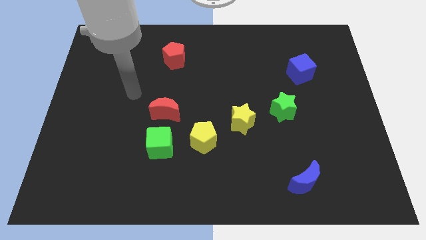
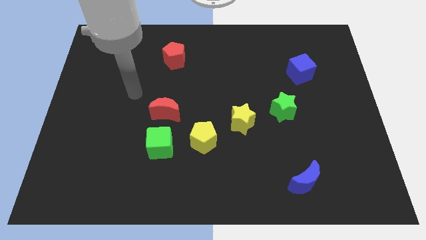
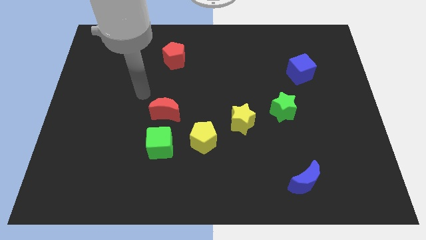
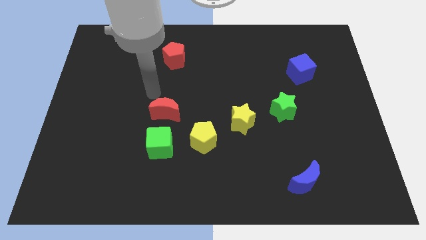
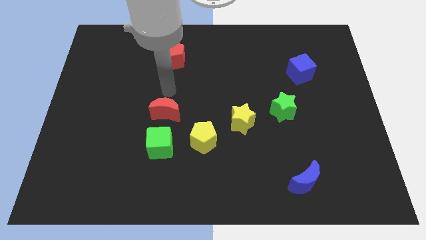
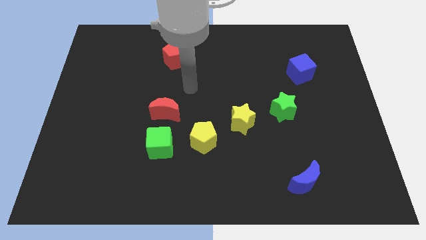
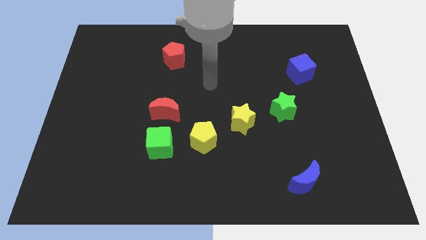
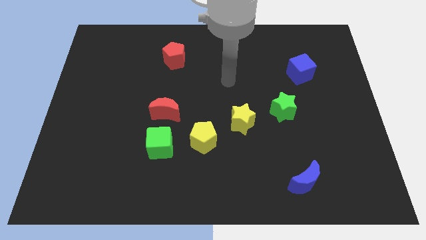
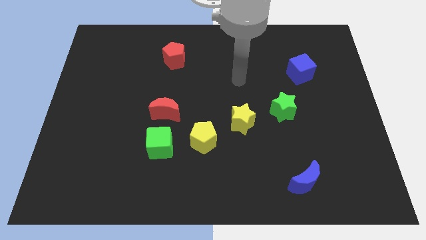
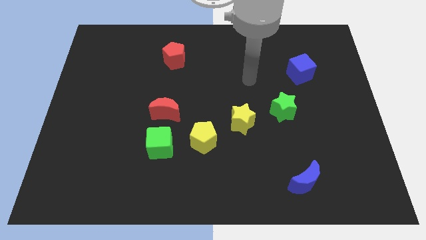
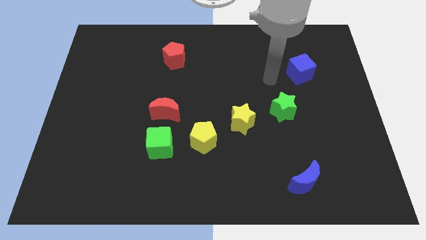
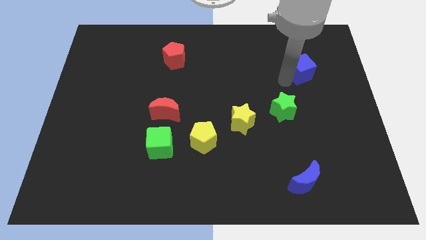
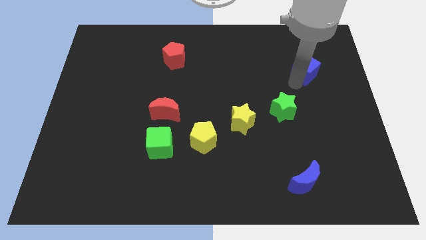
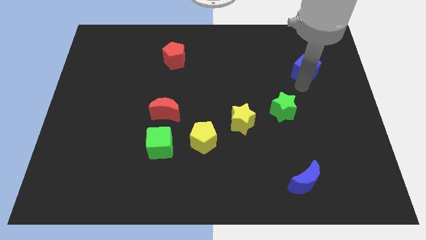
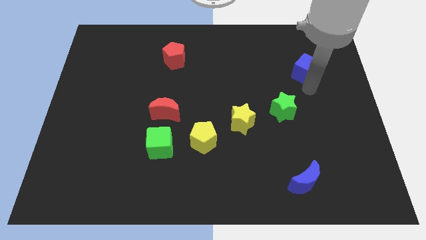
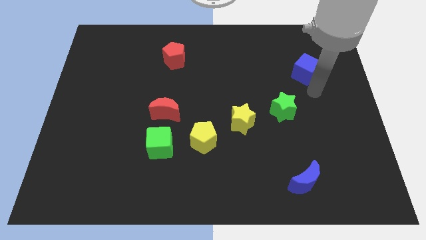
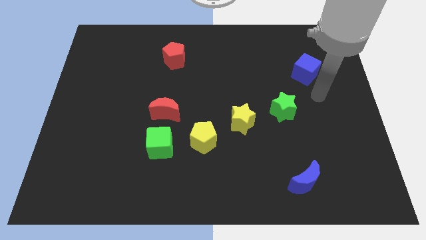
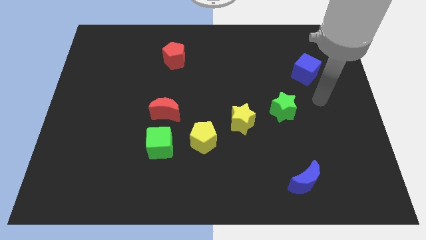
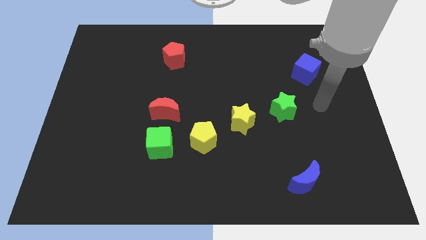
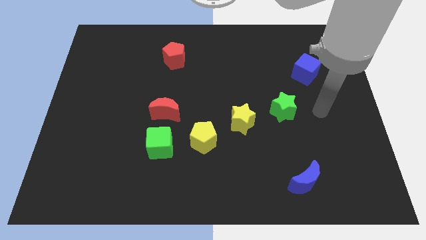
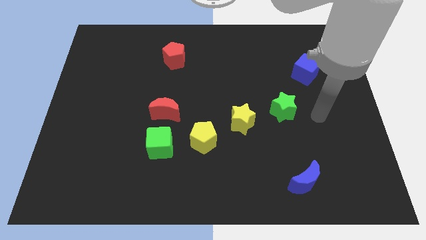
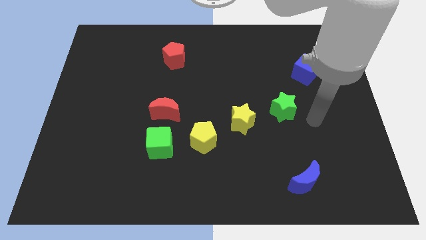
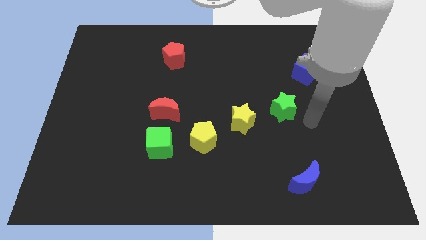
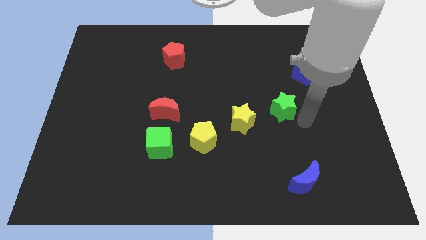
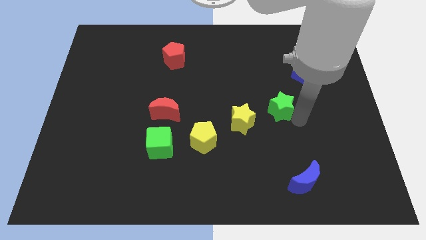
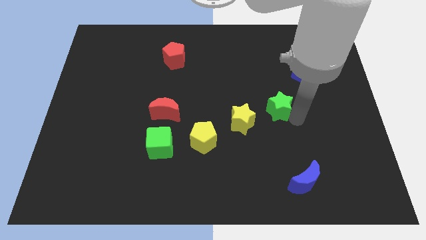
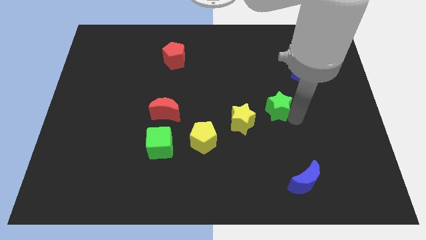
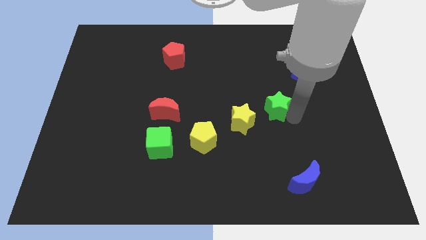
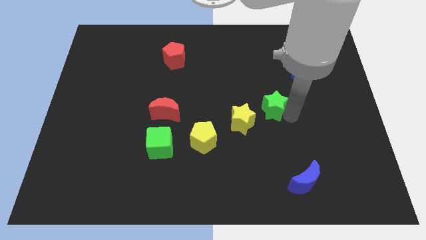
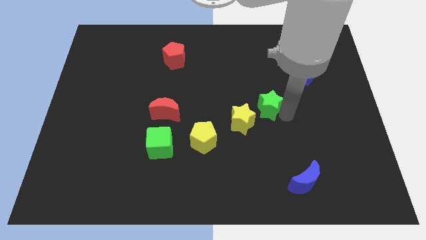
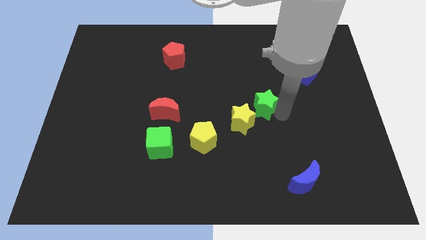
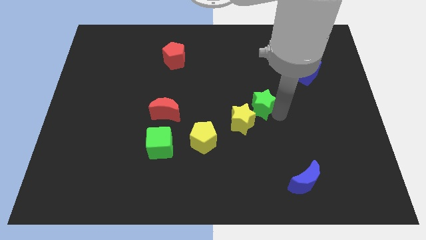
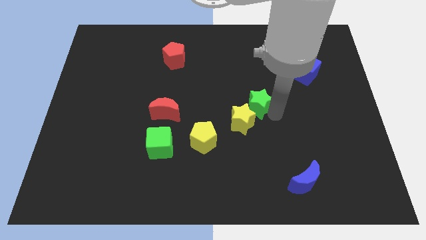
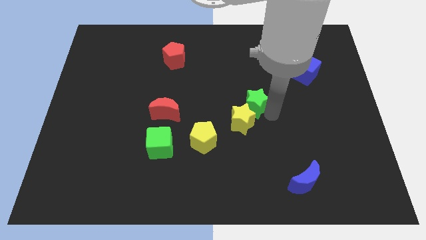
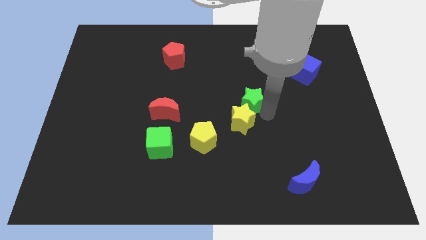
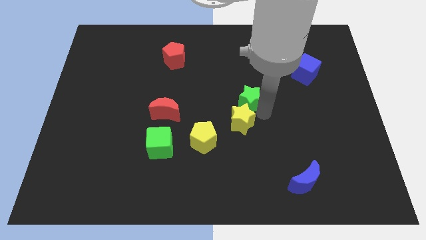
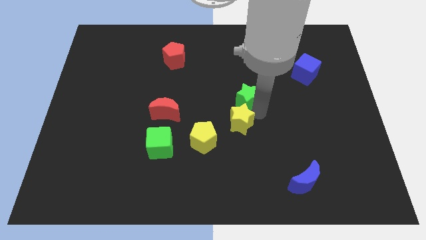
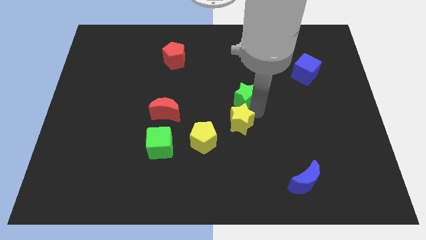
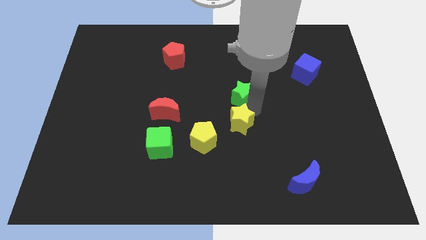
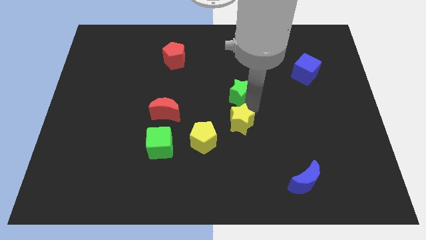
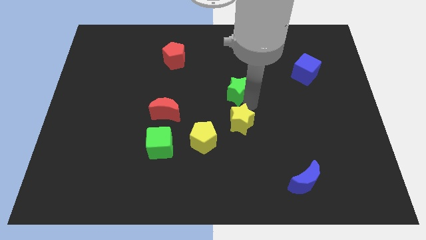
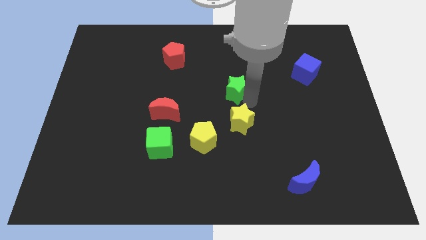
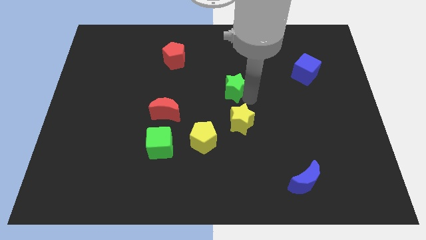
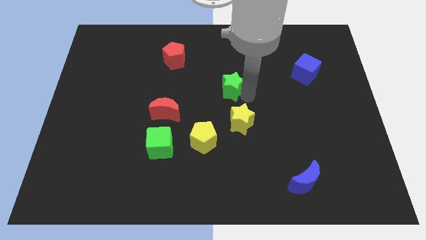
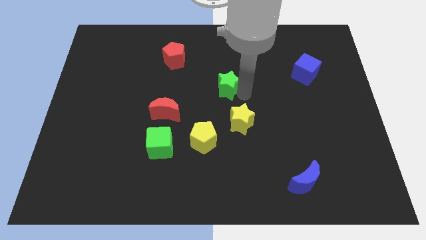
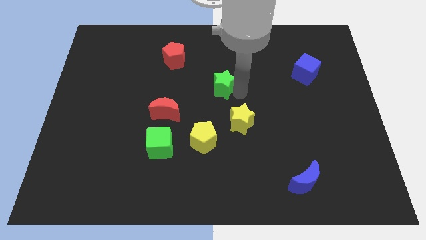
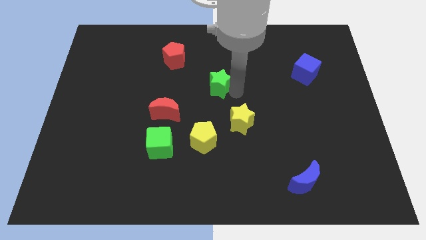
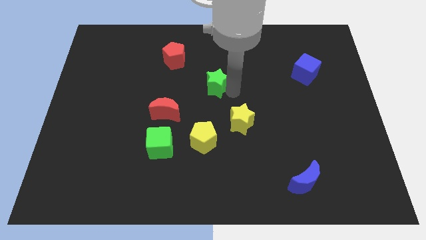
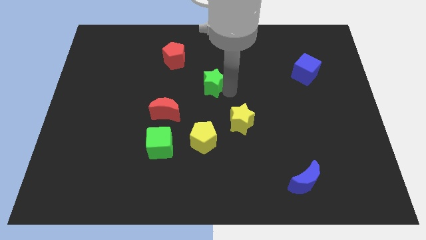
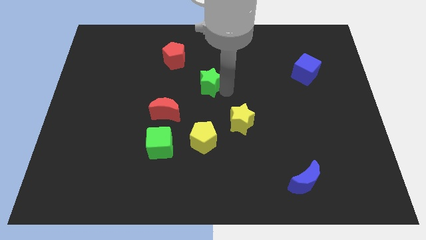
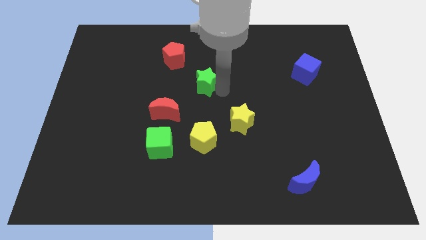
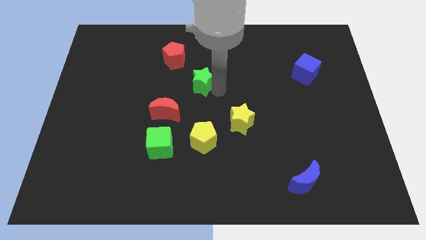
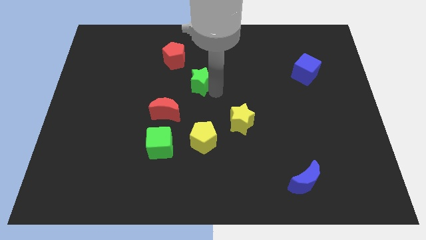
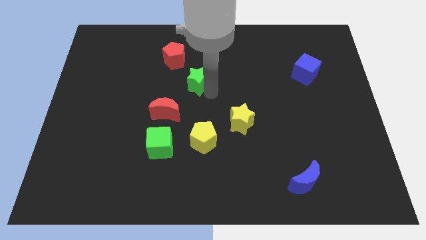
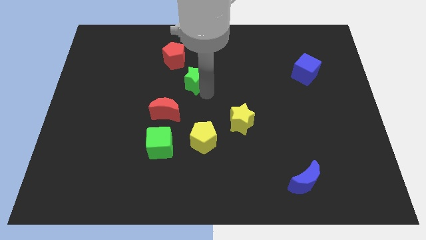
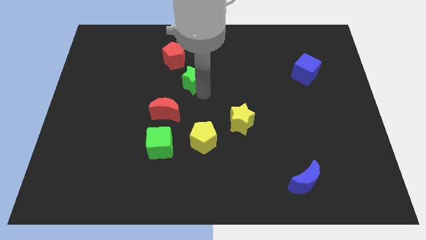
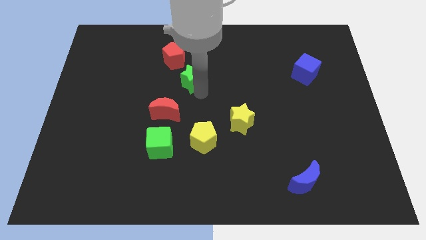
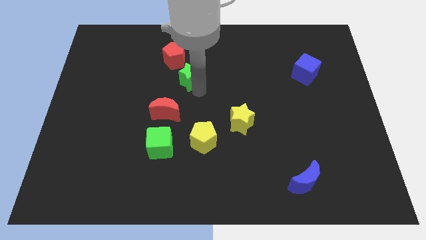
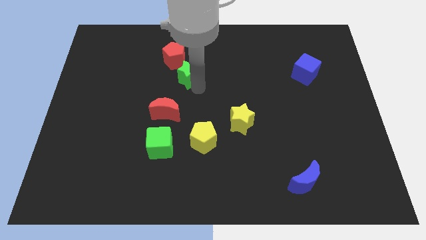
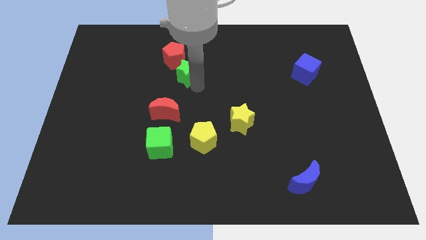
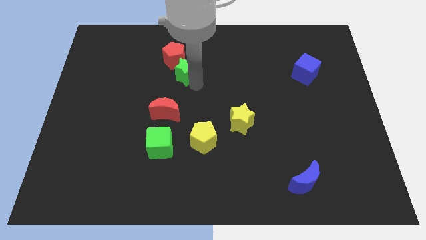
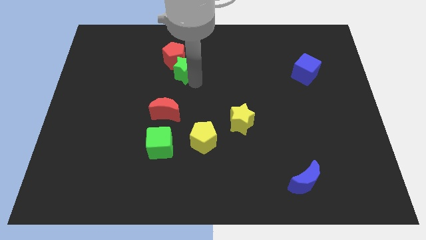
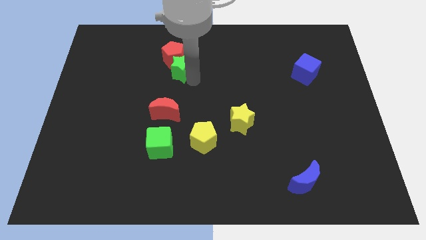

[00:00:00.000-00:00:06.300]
push the green star towards the red pentagon

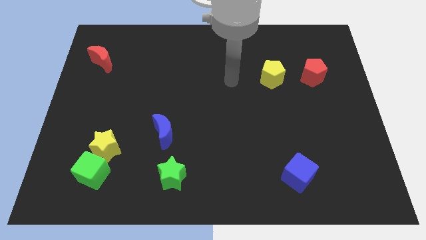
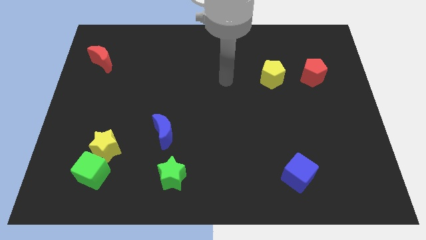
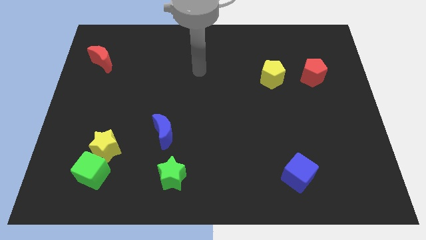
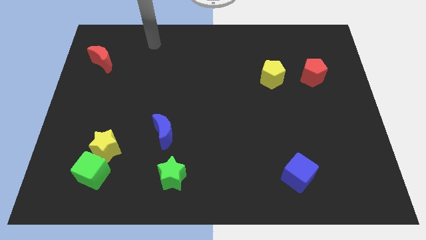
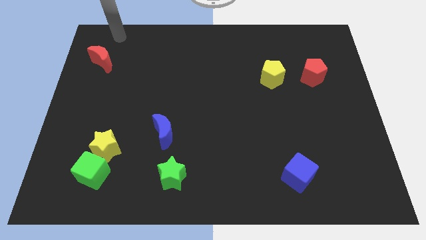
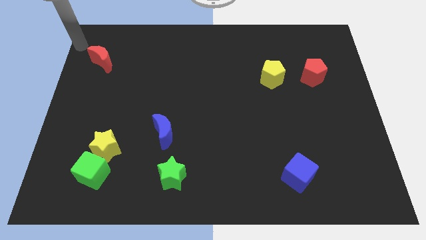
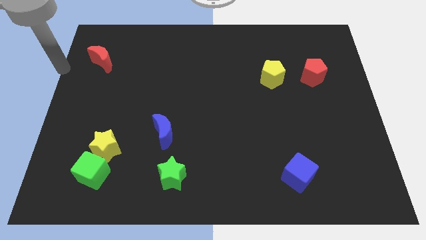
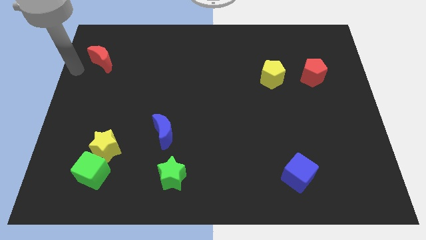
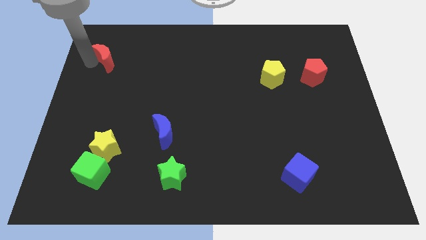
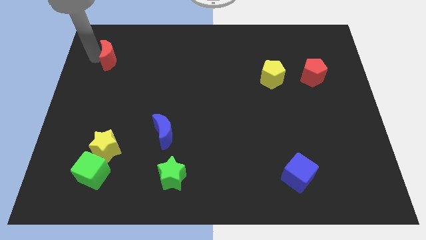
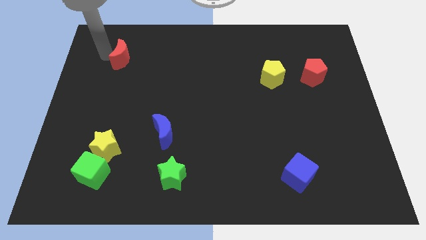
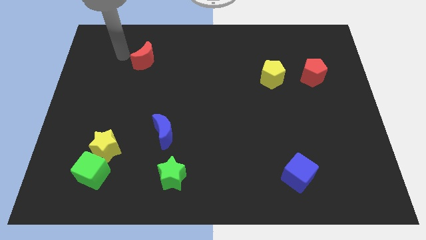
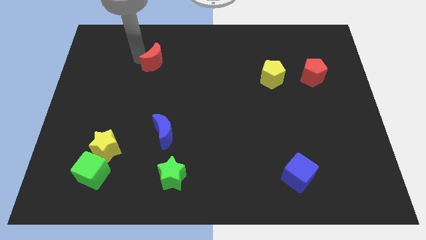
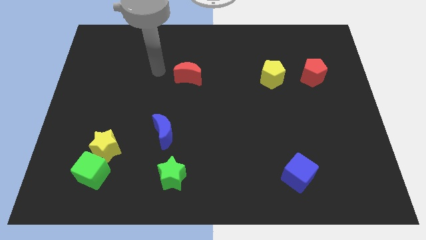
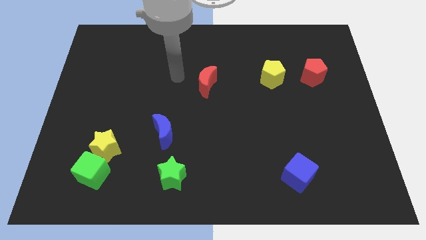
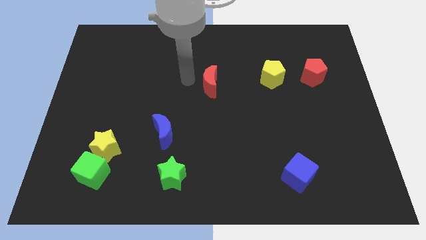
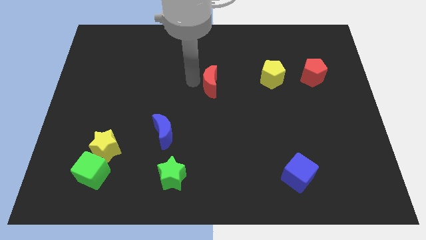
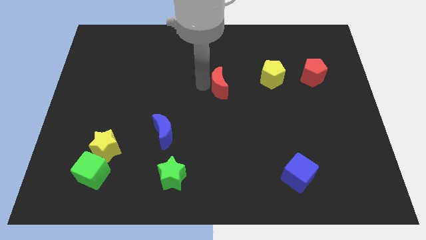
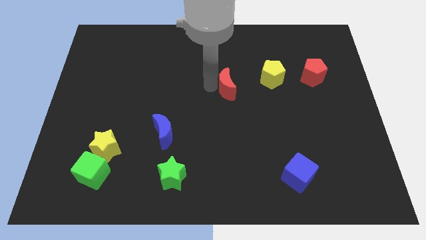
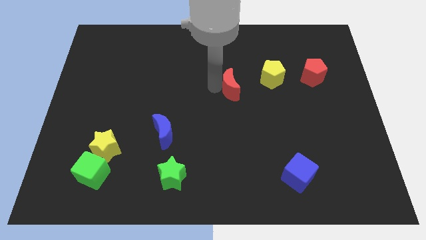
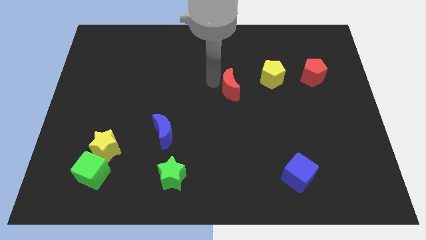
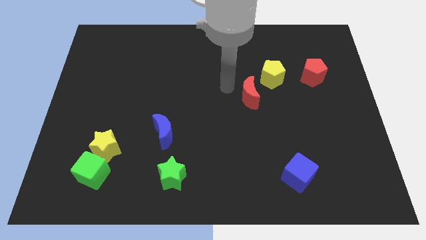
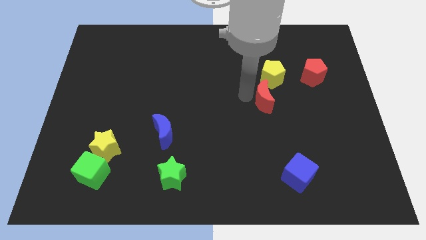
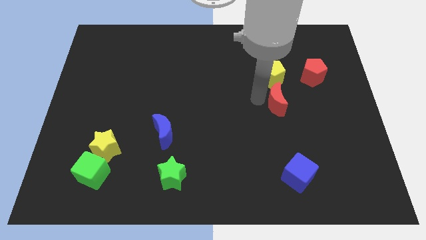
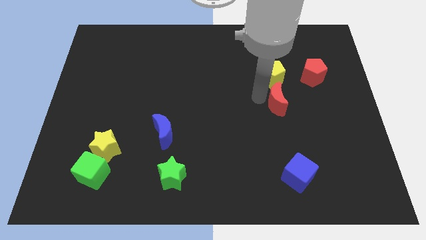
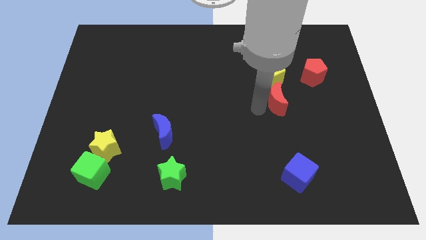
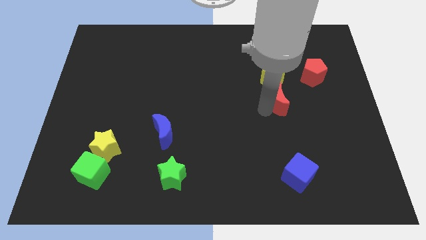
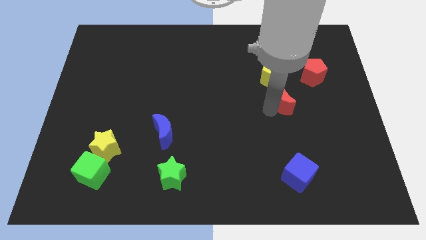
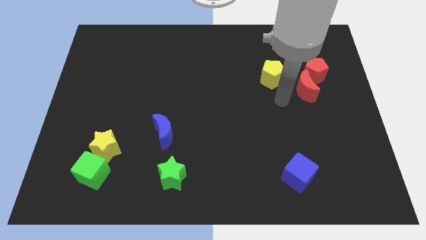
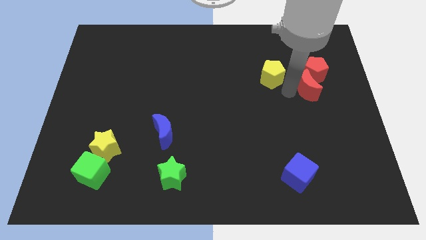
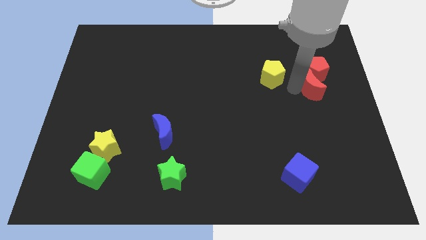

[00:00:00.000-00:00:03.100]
move the red moon towards the red pentagon
